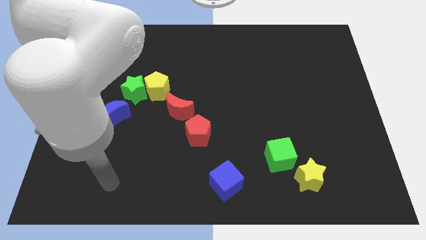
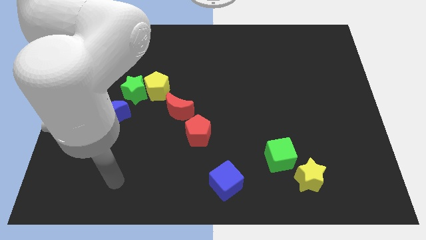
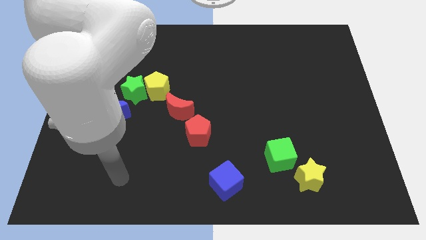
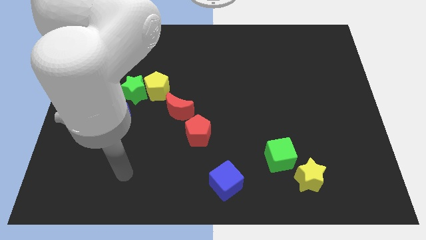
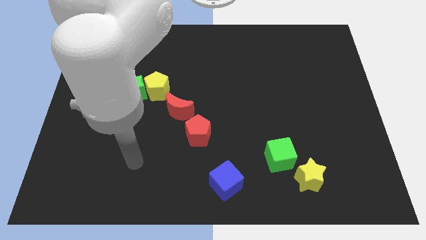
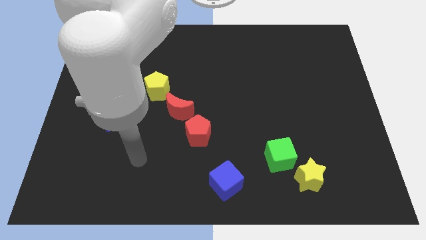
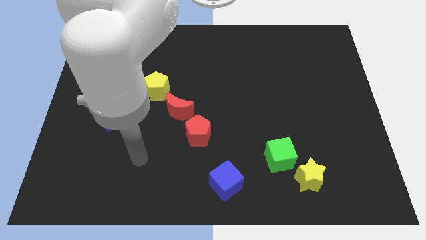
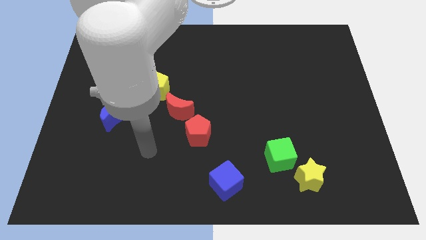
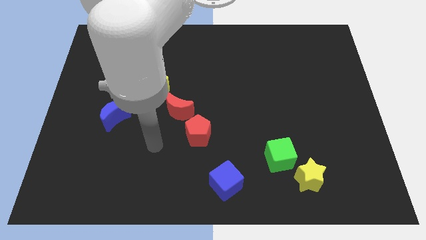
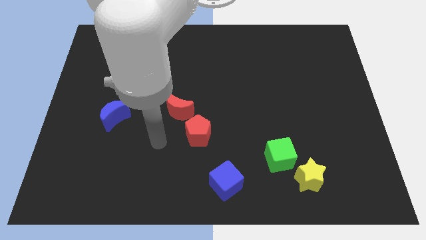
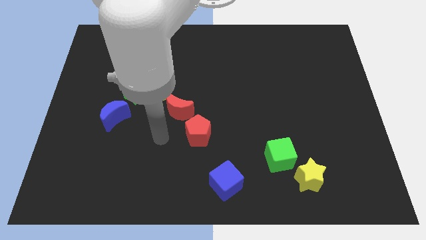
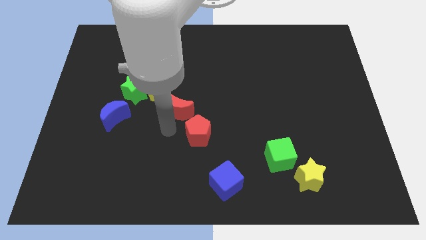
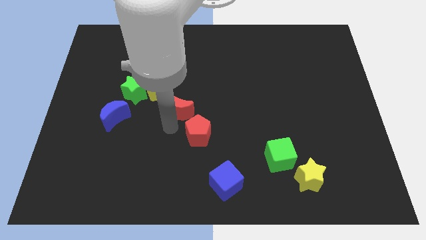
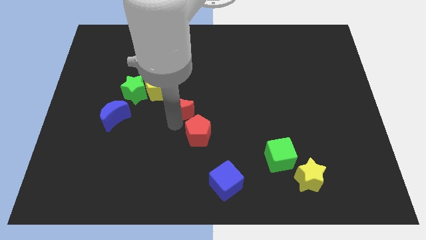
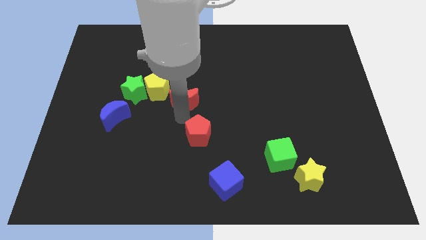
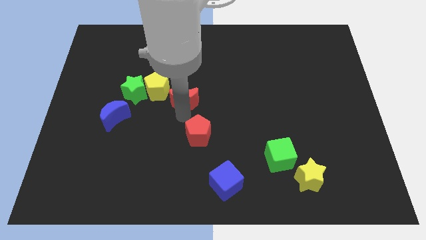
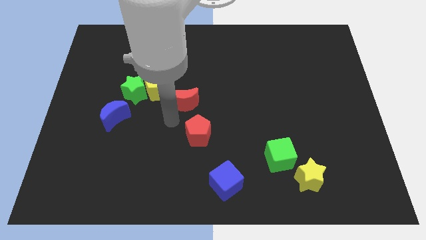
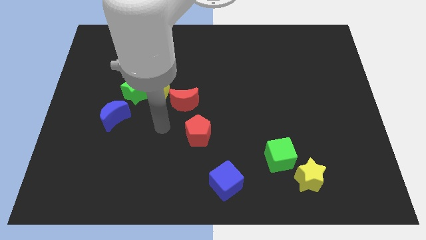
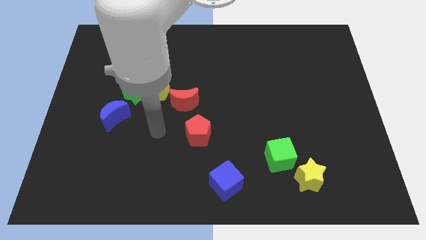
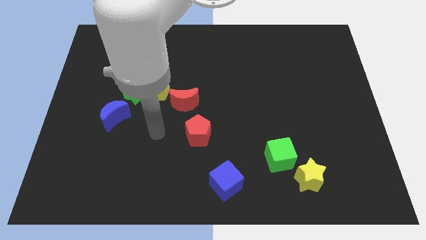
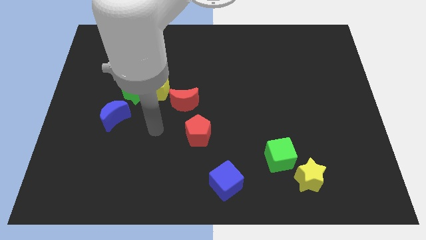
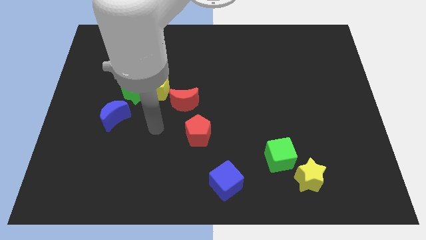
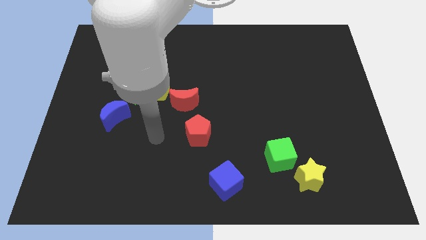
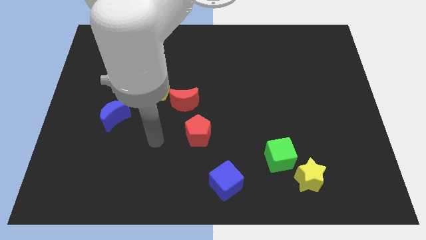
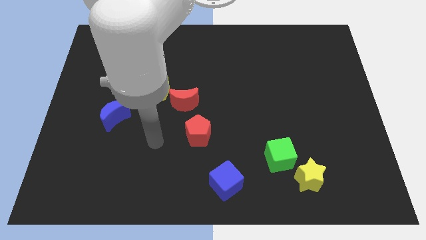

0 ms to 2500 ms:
move the red crescent away from the red pentagon

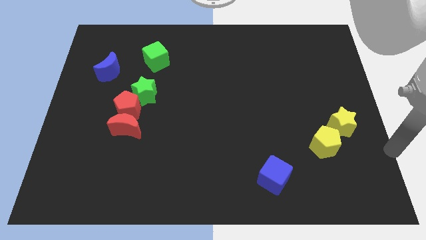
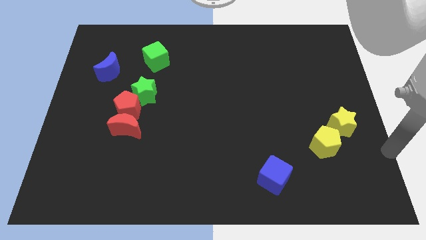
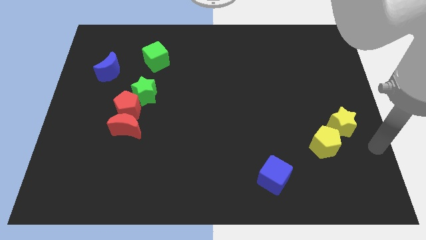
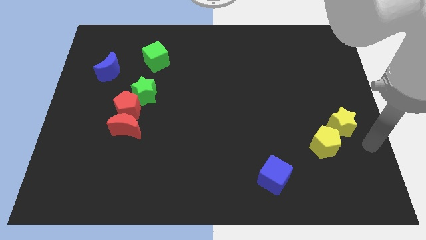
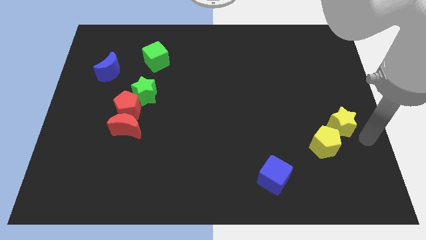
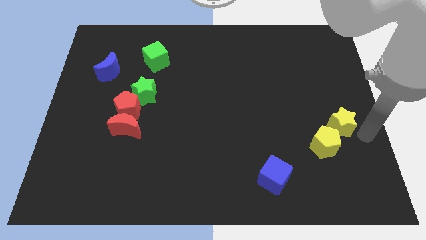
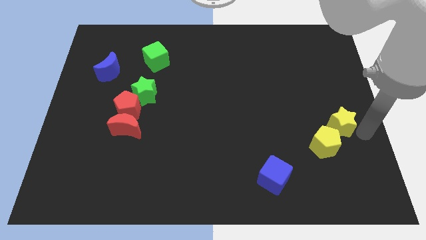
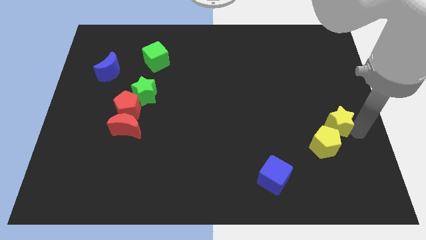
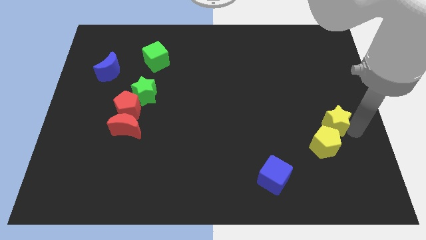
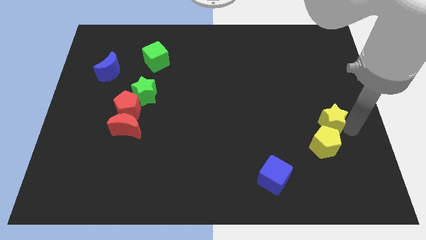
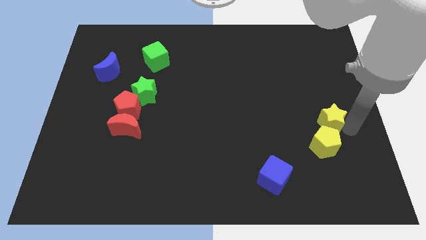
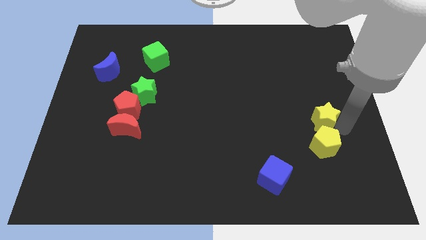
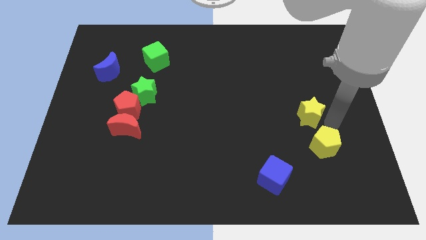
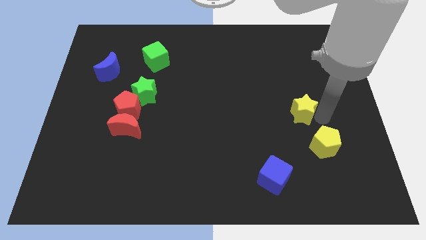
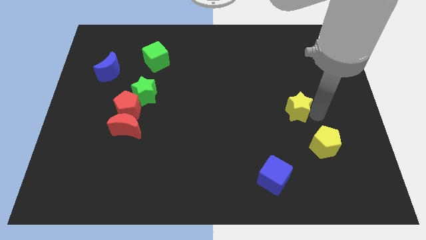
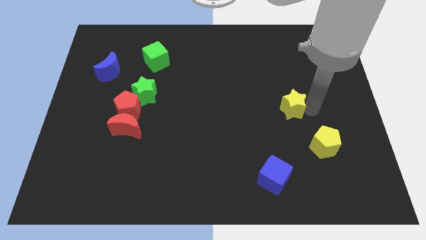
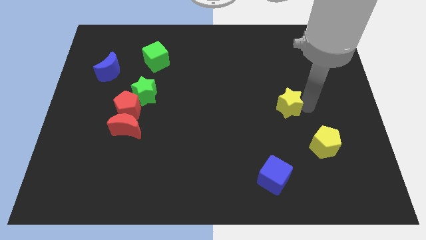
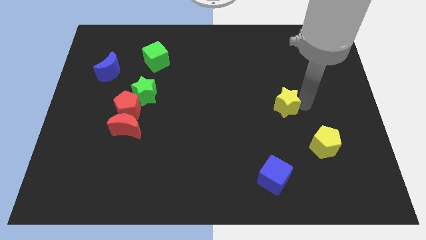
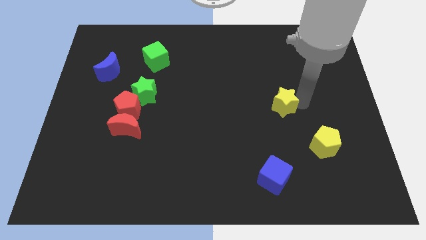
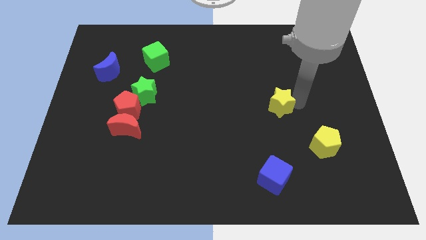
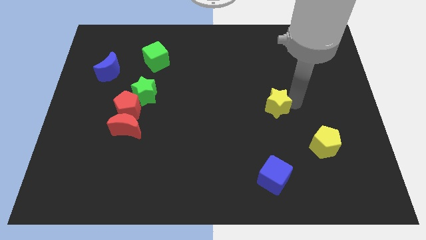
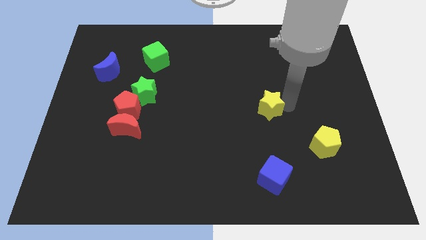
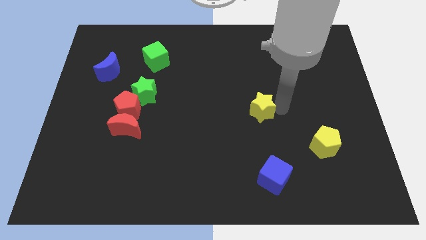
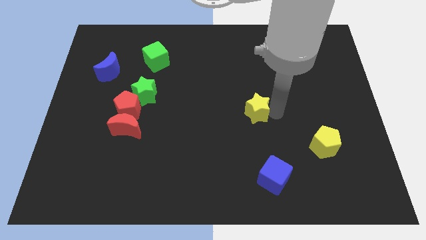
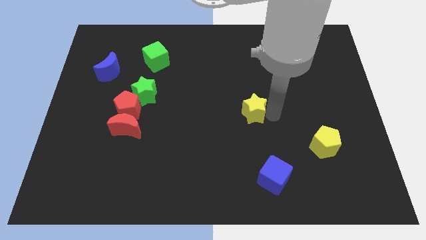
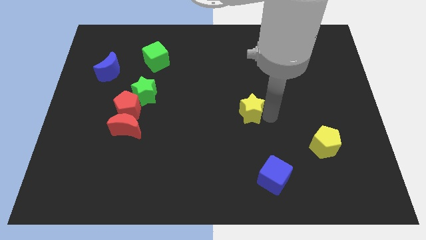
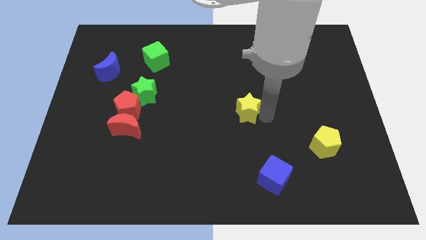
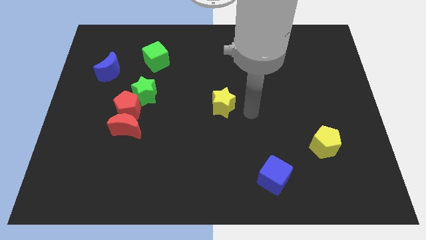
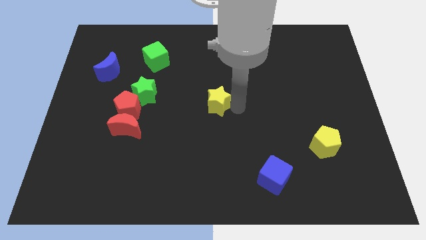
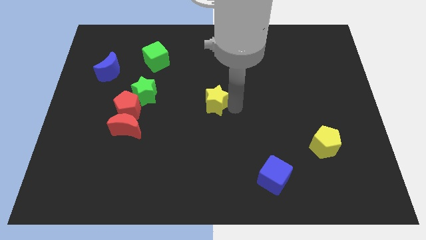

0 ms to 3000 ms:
place the yellow star at the center of the board

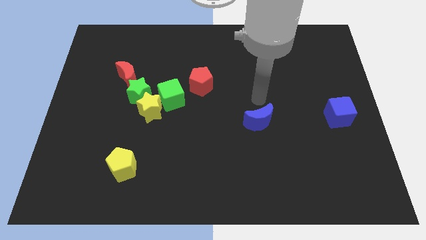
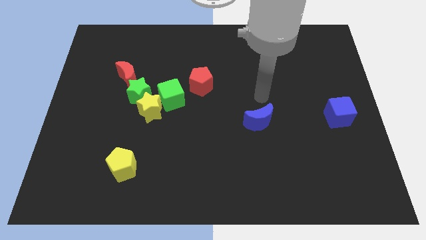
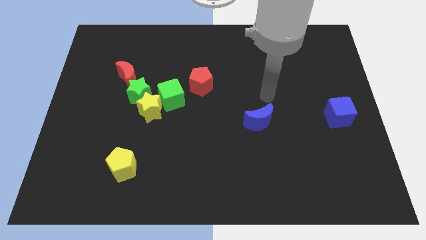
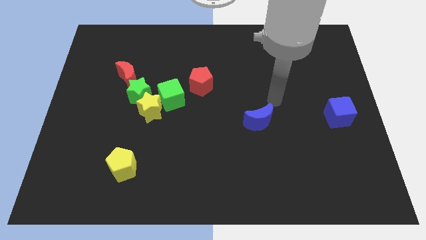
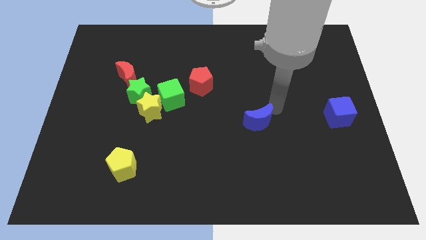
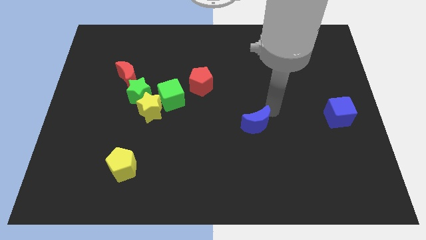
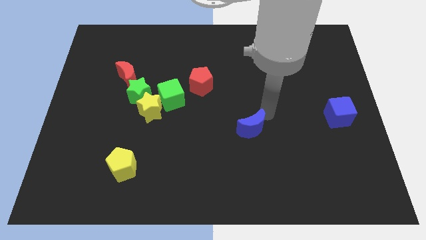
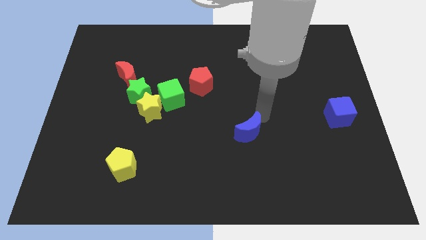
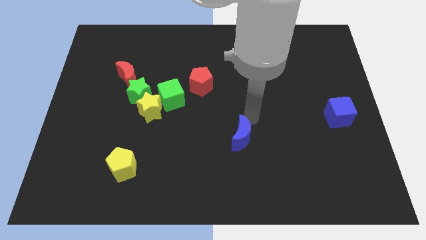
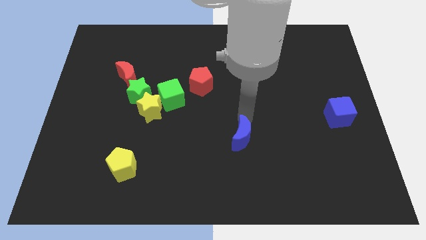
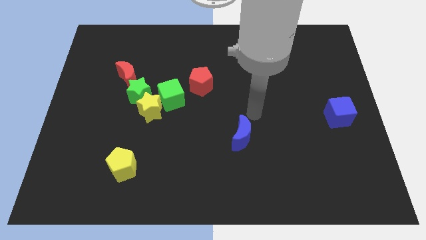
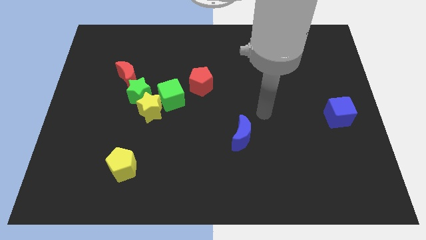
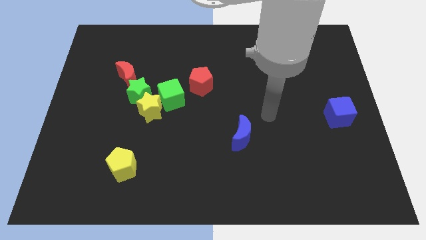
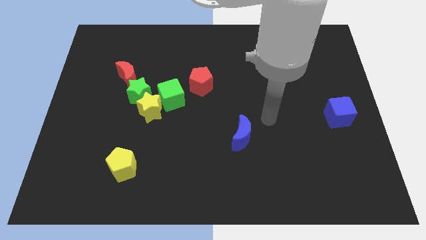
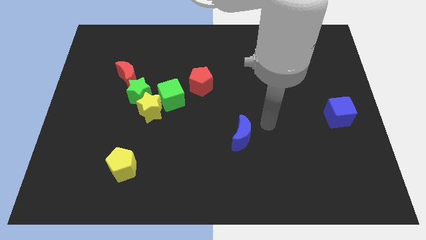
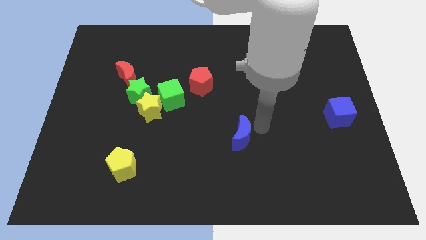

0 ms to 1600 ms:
push the blue moon to the center of the board

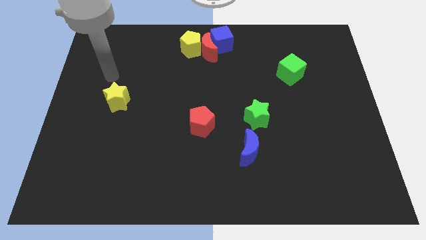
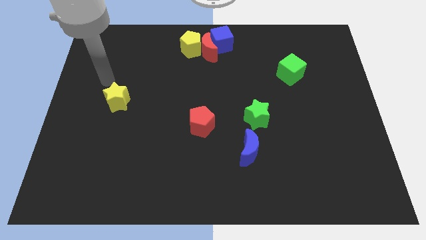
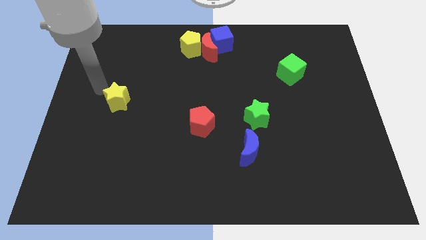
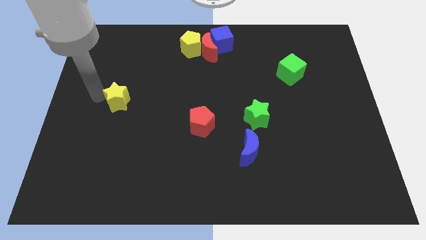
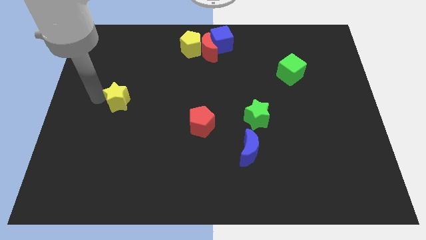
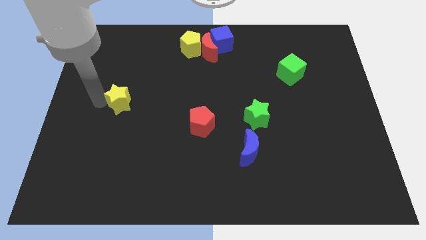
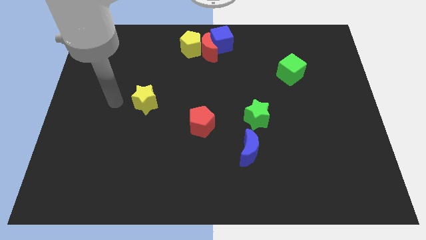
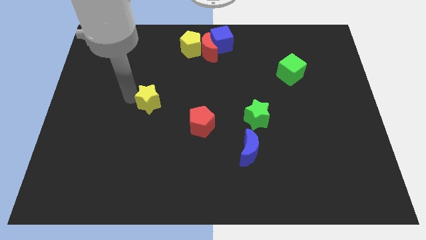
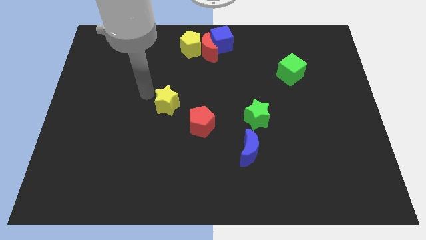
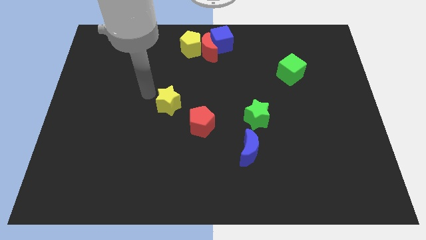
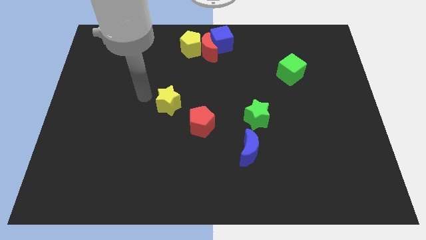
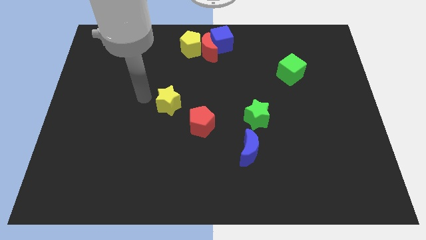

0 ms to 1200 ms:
move the yellow star towards the red crescent

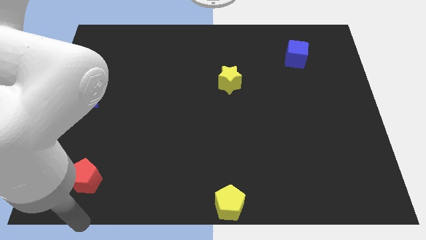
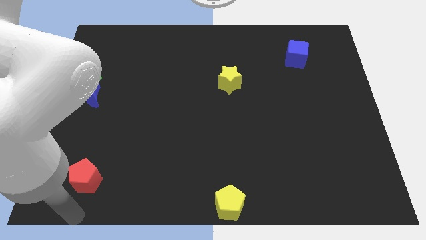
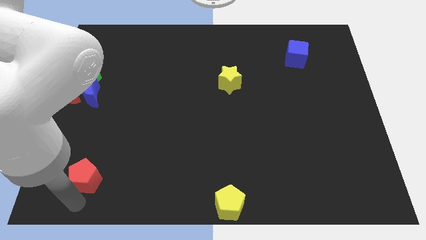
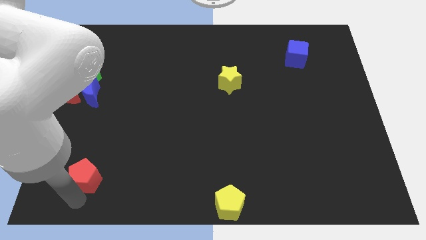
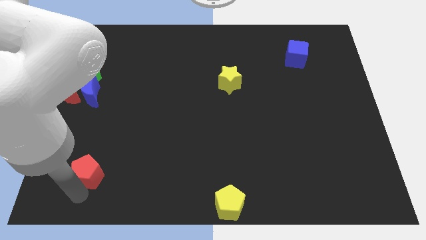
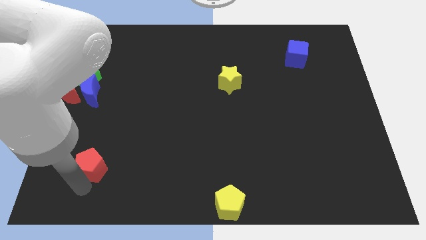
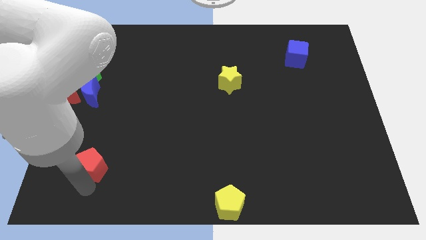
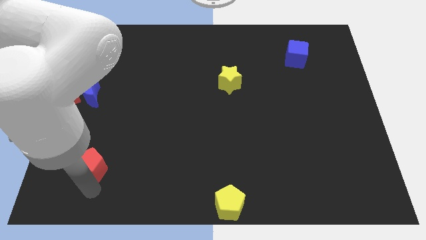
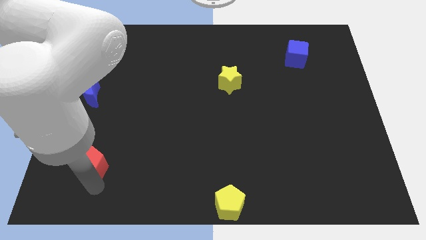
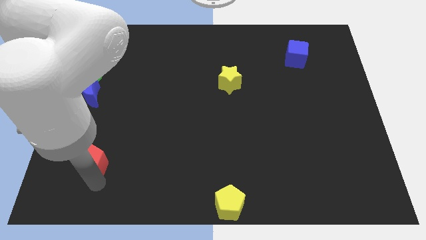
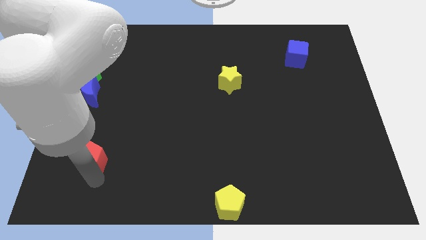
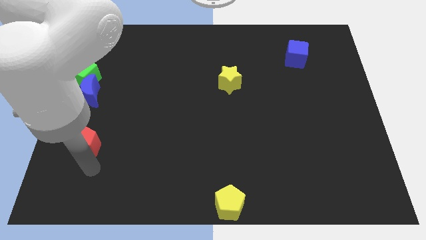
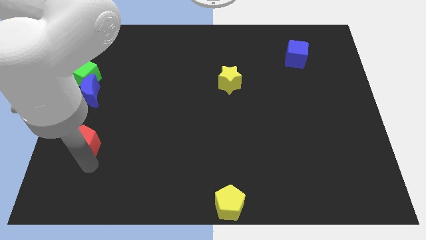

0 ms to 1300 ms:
move the red pentagon to the center left
